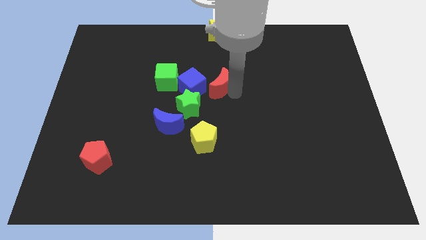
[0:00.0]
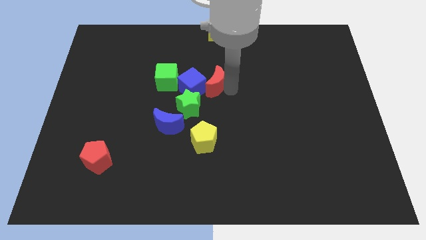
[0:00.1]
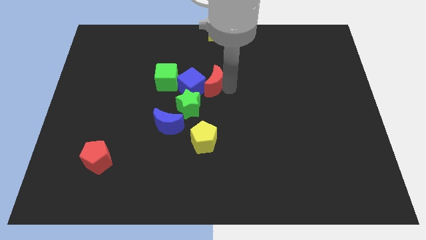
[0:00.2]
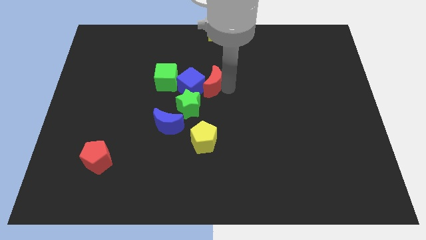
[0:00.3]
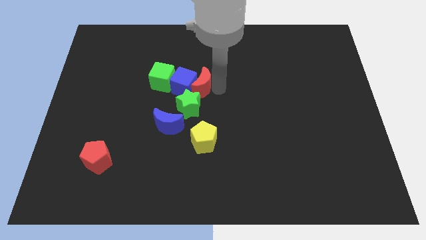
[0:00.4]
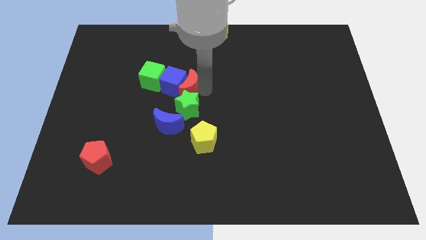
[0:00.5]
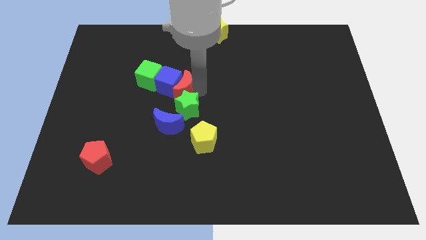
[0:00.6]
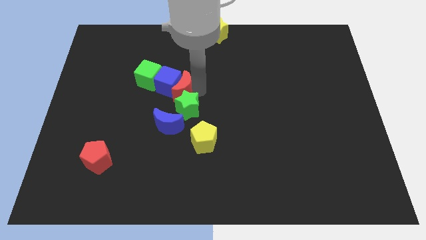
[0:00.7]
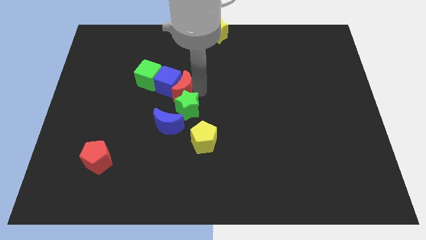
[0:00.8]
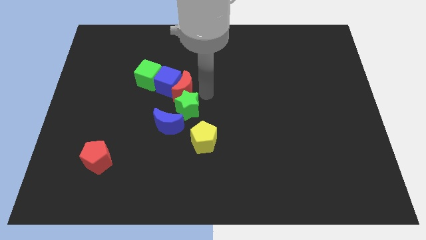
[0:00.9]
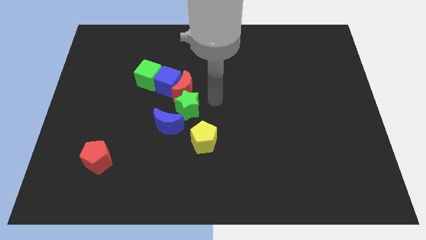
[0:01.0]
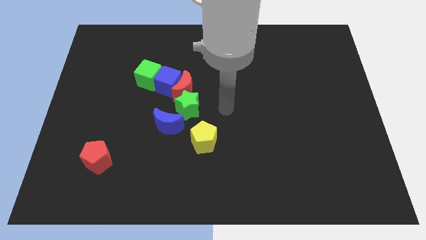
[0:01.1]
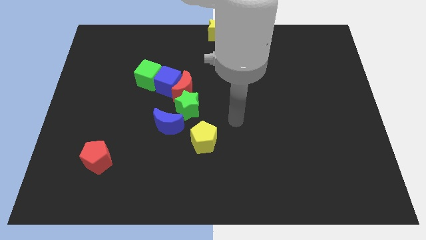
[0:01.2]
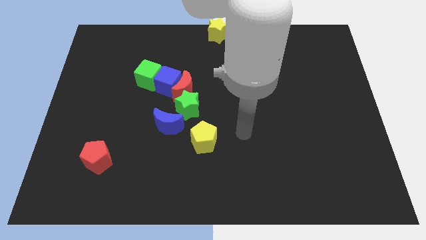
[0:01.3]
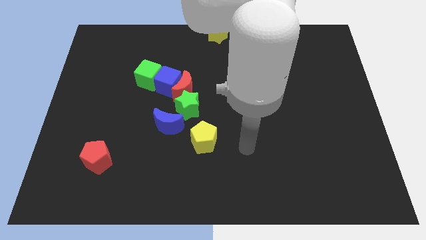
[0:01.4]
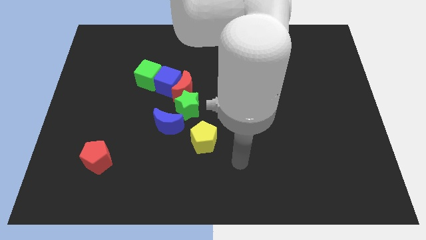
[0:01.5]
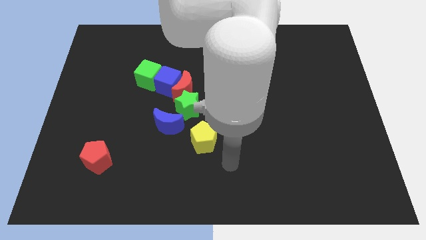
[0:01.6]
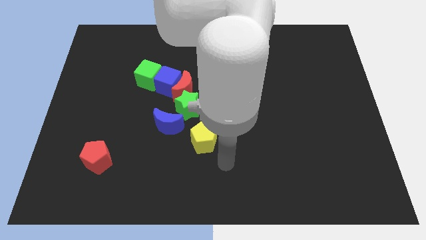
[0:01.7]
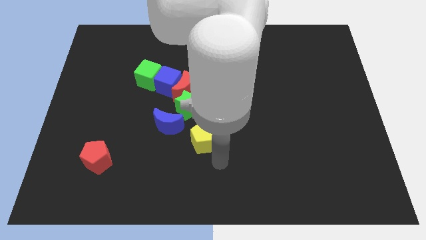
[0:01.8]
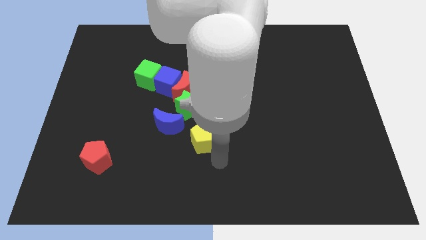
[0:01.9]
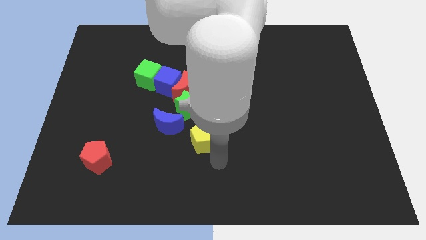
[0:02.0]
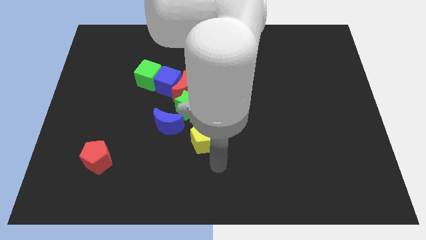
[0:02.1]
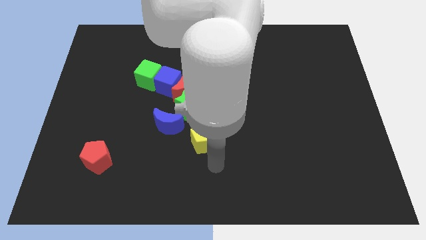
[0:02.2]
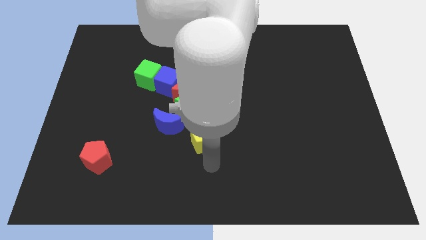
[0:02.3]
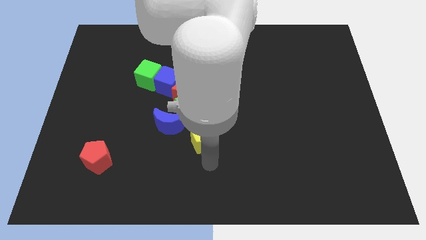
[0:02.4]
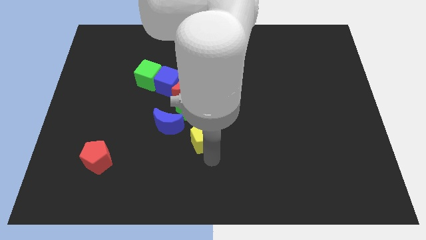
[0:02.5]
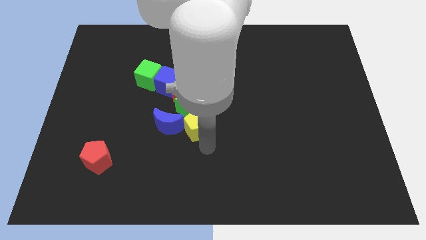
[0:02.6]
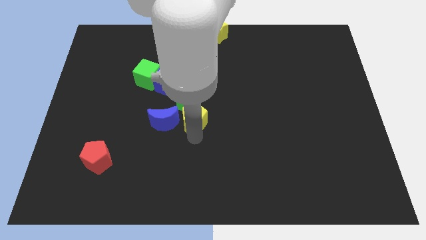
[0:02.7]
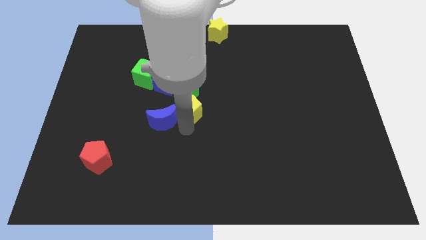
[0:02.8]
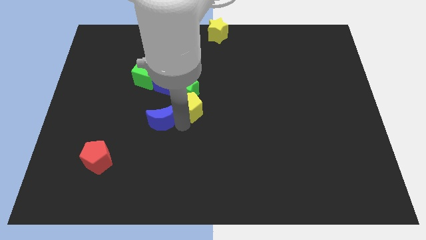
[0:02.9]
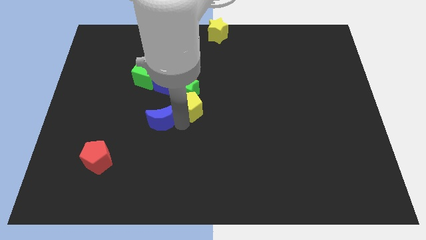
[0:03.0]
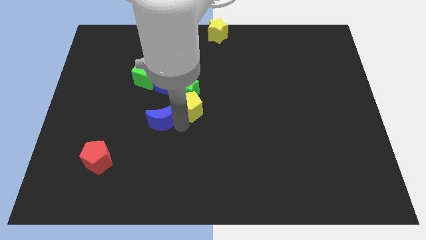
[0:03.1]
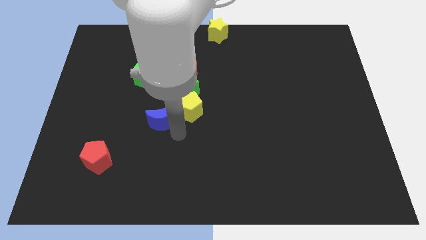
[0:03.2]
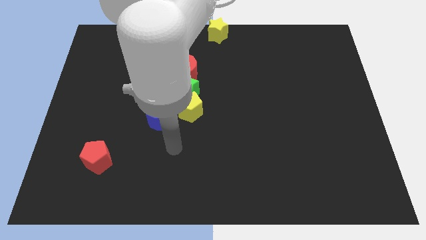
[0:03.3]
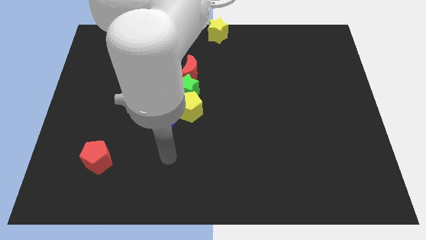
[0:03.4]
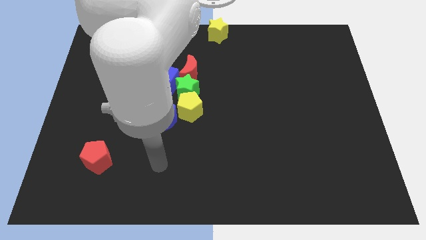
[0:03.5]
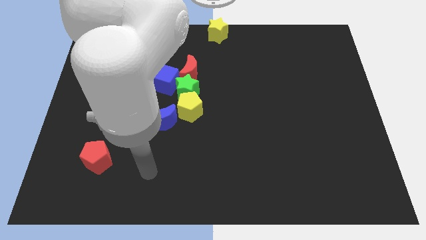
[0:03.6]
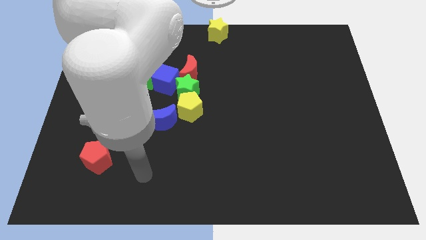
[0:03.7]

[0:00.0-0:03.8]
adjust the green star into the blue cube from right along with the yellow pentagon from bottom

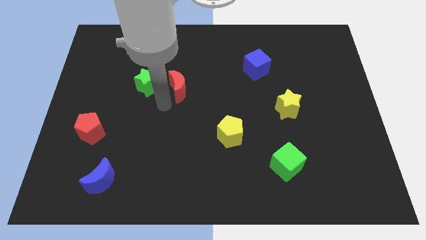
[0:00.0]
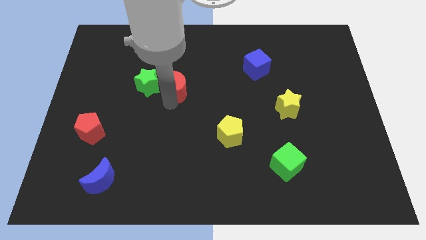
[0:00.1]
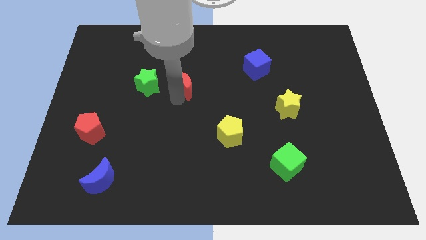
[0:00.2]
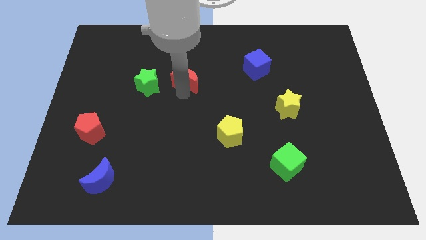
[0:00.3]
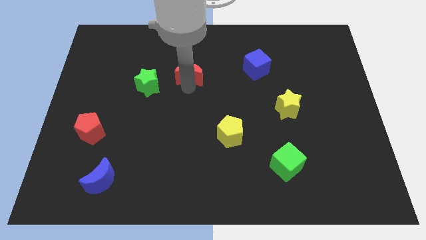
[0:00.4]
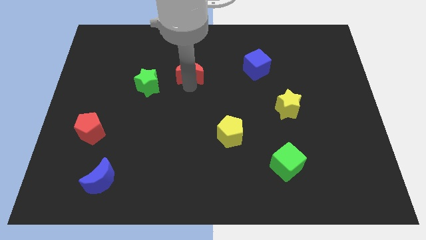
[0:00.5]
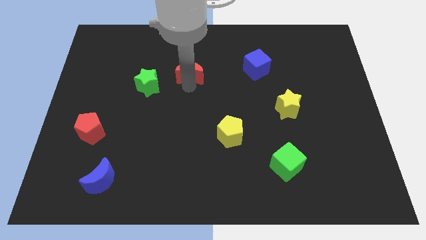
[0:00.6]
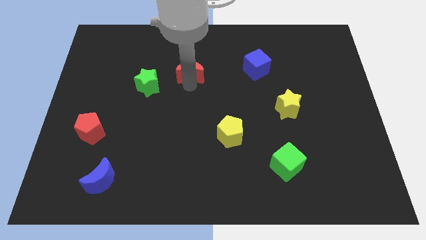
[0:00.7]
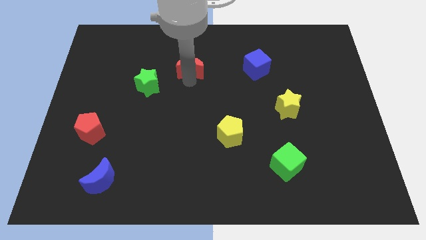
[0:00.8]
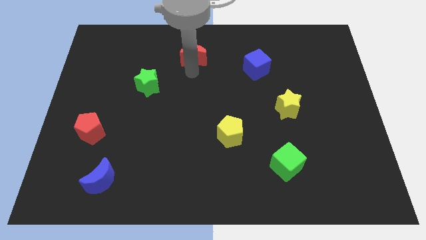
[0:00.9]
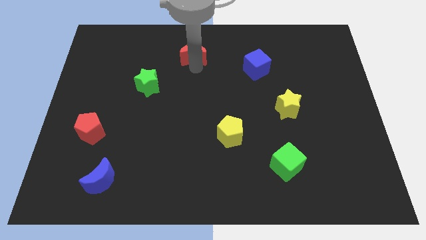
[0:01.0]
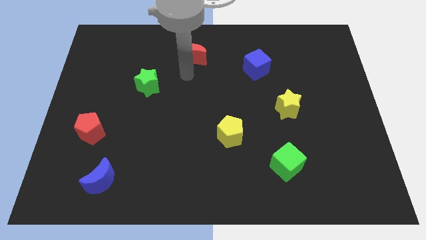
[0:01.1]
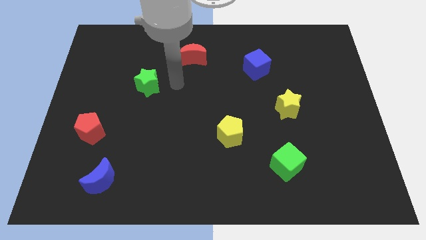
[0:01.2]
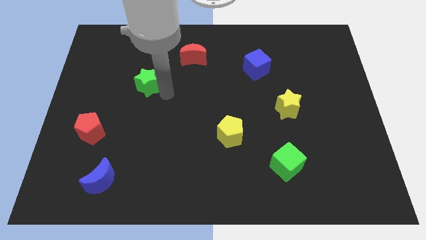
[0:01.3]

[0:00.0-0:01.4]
slide the red moon to the top

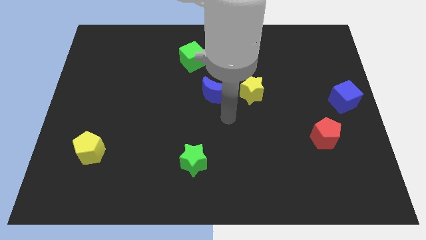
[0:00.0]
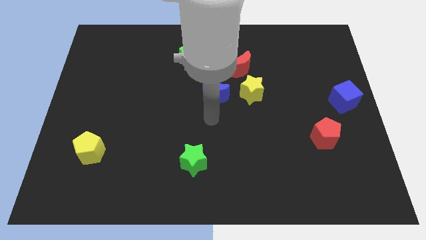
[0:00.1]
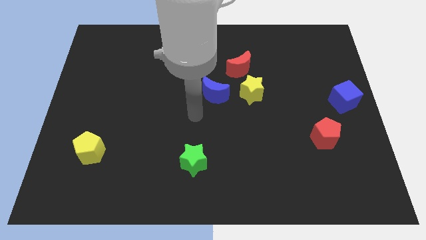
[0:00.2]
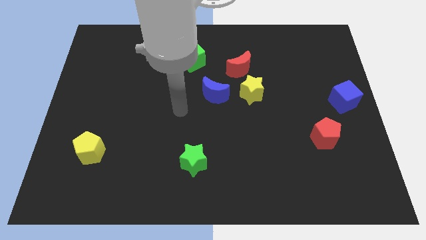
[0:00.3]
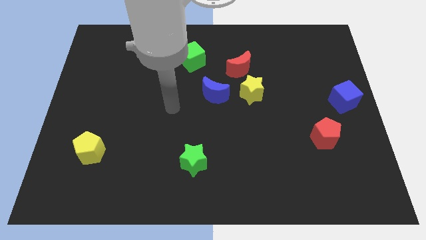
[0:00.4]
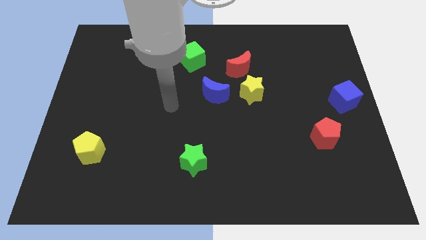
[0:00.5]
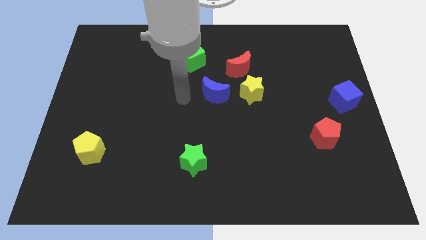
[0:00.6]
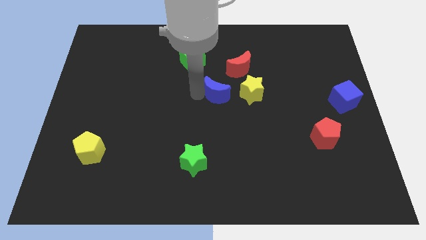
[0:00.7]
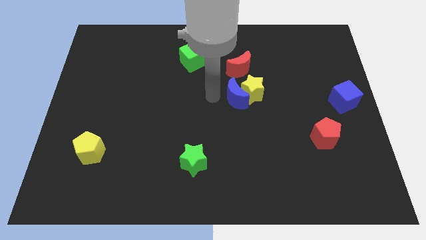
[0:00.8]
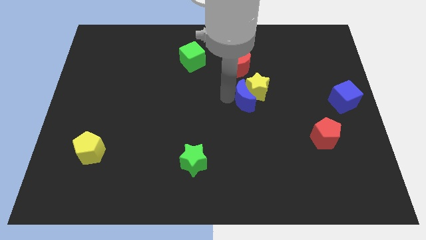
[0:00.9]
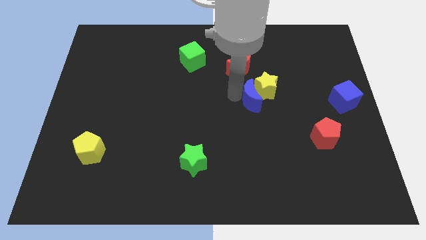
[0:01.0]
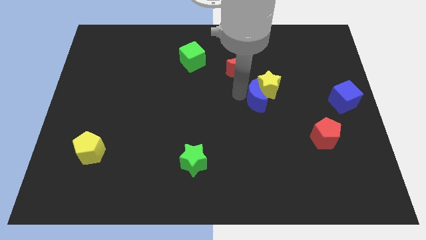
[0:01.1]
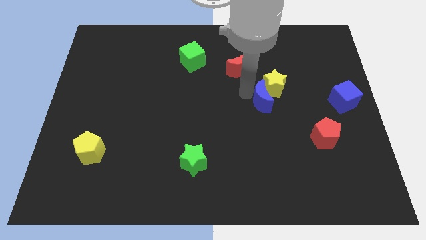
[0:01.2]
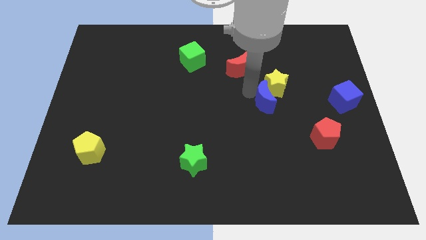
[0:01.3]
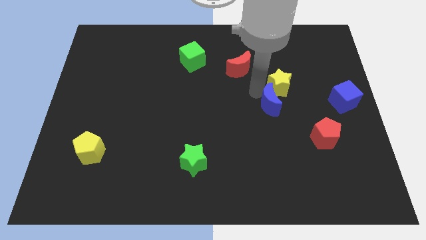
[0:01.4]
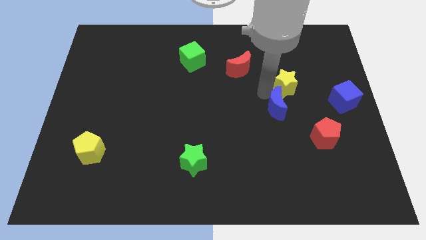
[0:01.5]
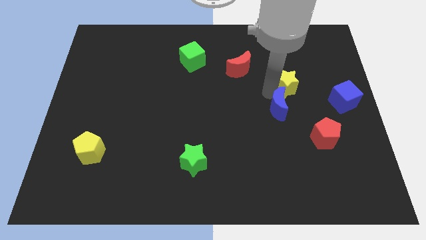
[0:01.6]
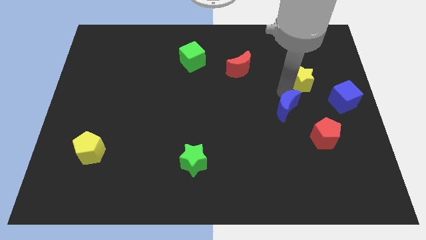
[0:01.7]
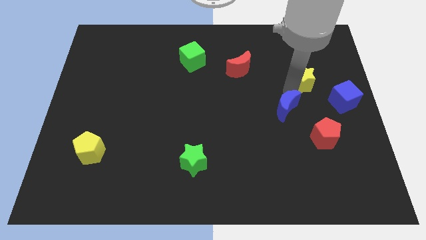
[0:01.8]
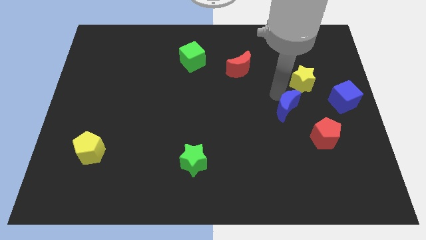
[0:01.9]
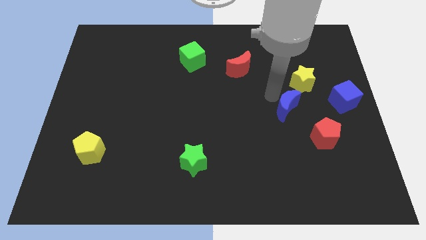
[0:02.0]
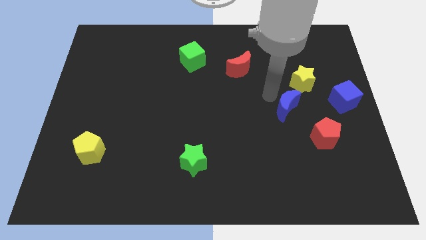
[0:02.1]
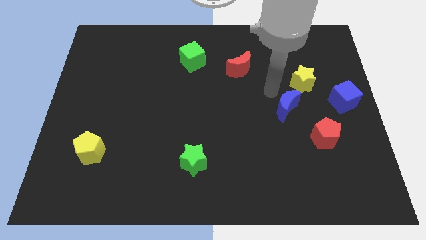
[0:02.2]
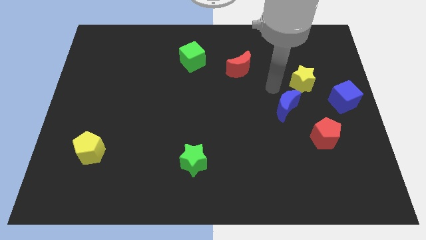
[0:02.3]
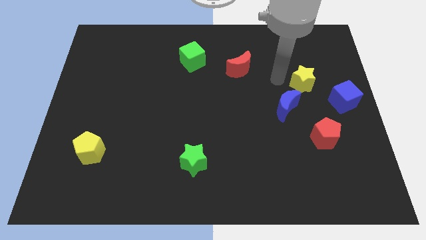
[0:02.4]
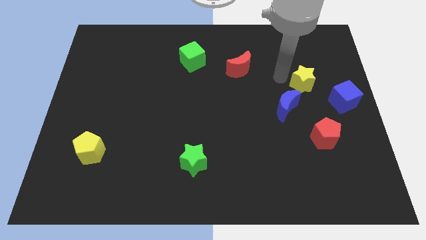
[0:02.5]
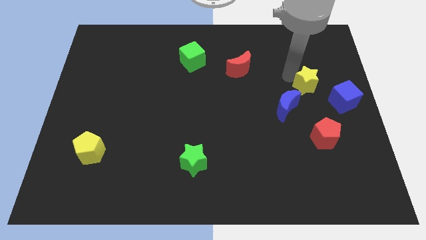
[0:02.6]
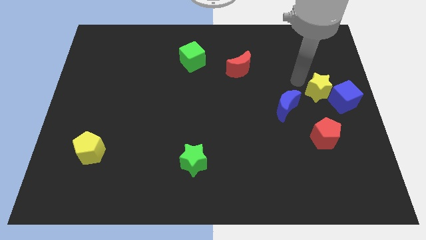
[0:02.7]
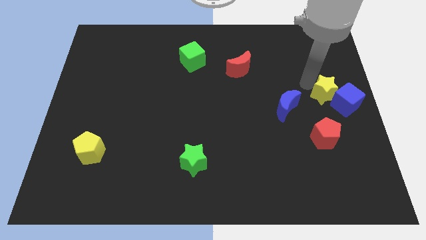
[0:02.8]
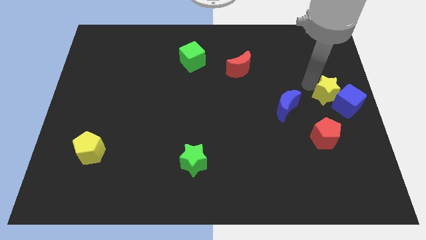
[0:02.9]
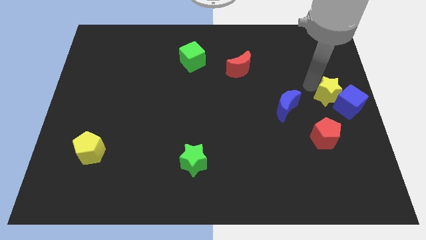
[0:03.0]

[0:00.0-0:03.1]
push the yellow star into the blue cube

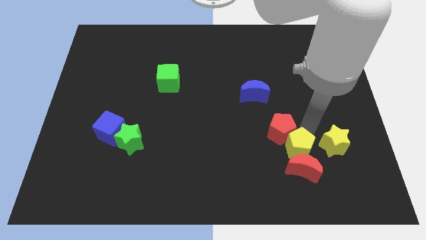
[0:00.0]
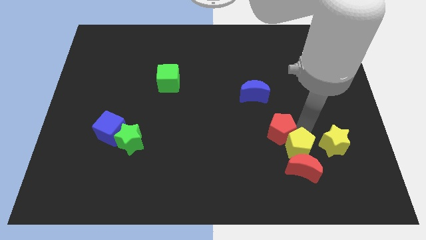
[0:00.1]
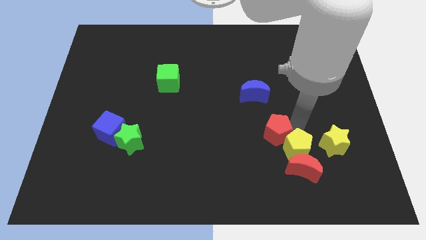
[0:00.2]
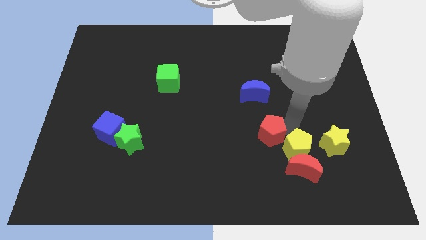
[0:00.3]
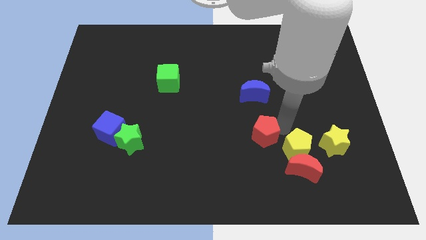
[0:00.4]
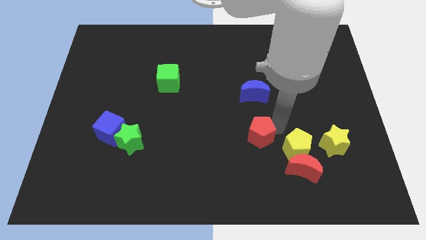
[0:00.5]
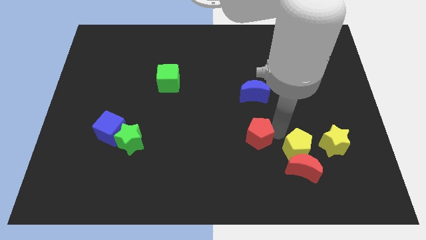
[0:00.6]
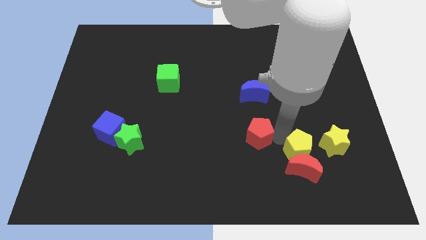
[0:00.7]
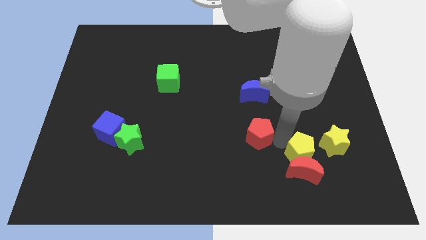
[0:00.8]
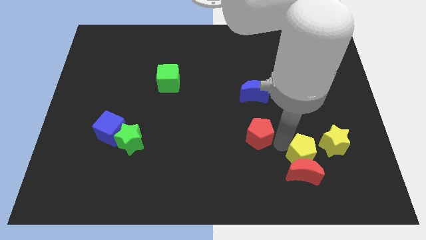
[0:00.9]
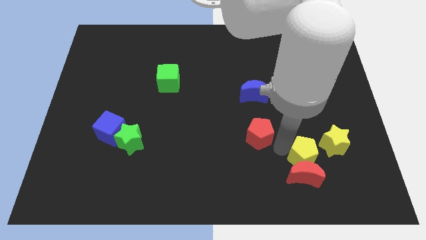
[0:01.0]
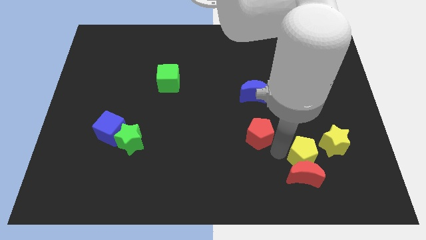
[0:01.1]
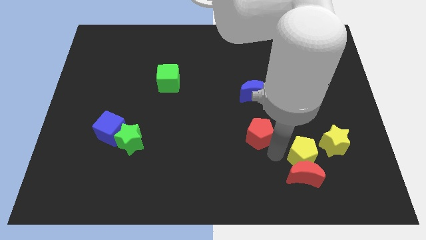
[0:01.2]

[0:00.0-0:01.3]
separate red pentagon from yellow pentagon
